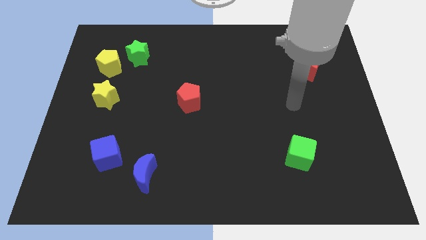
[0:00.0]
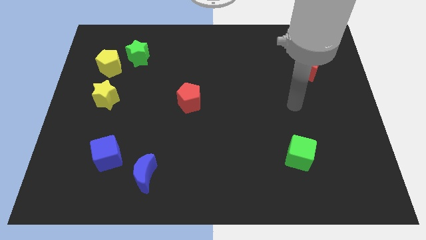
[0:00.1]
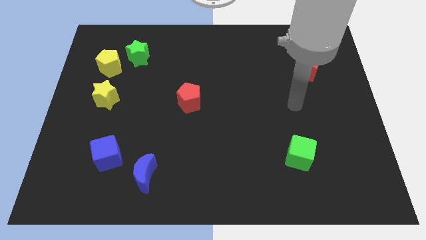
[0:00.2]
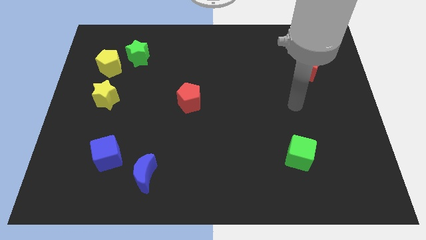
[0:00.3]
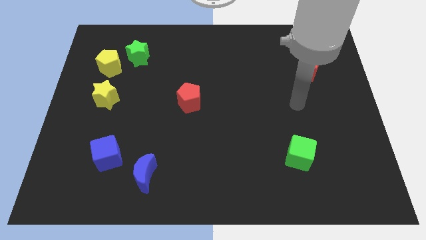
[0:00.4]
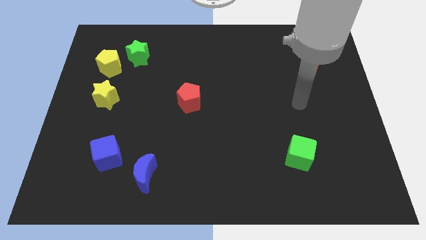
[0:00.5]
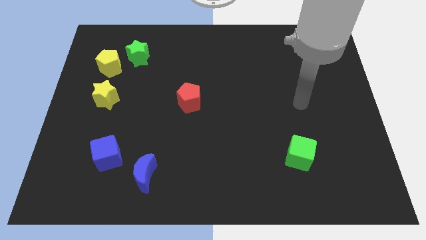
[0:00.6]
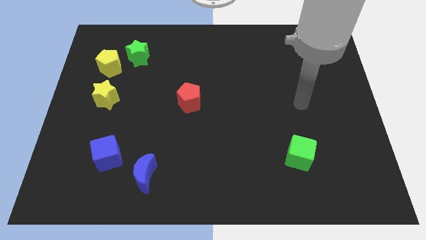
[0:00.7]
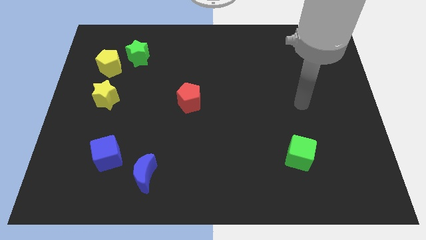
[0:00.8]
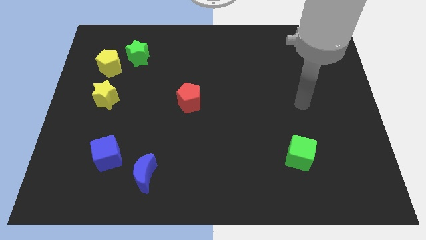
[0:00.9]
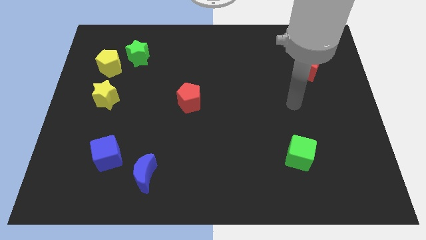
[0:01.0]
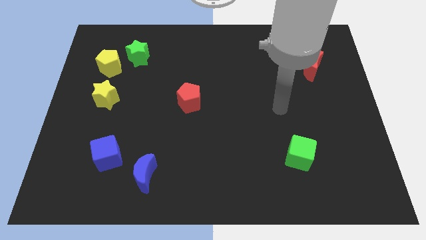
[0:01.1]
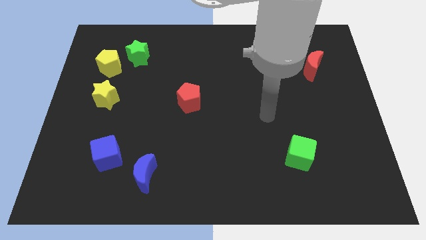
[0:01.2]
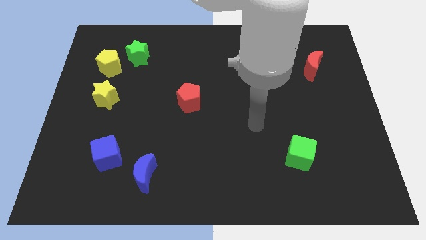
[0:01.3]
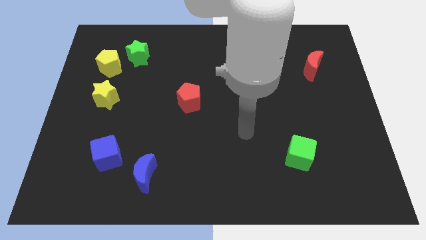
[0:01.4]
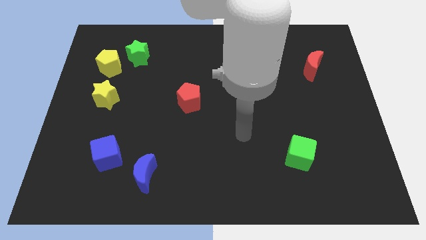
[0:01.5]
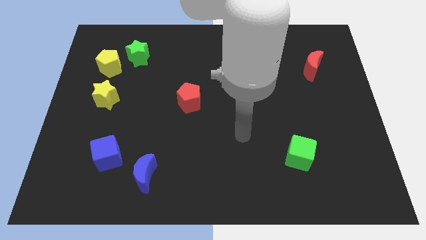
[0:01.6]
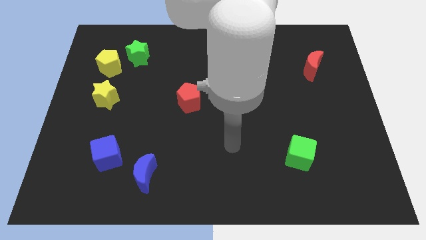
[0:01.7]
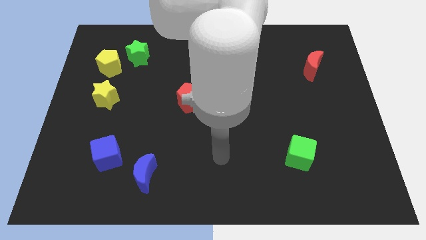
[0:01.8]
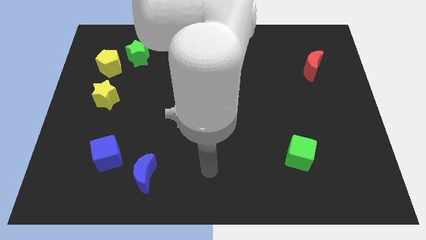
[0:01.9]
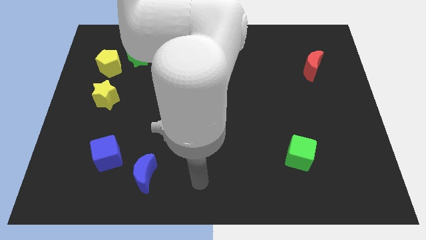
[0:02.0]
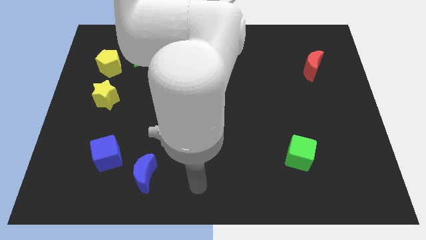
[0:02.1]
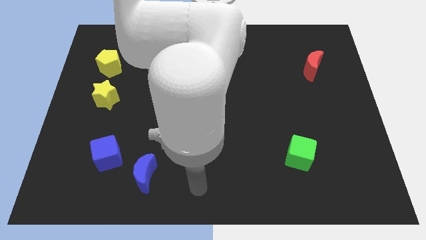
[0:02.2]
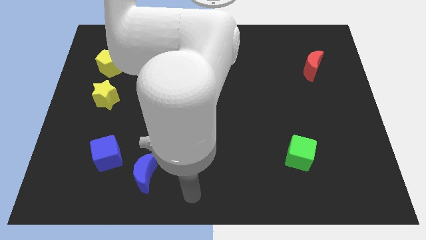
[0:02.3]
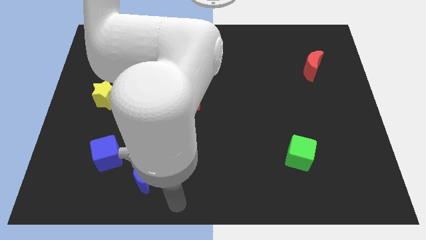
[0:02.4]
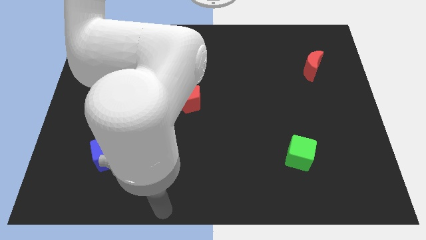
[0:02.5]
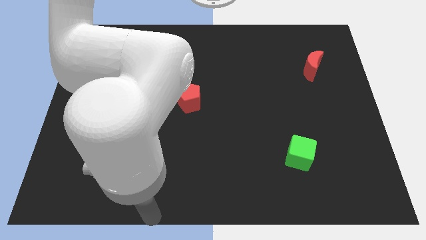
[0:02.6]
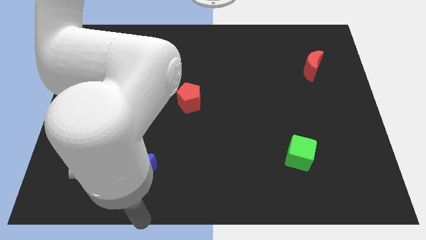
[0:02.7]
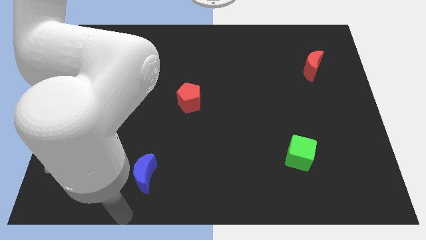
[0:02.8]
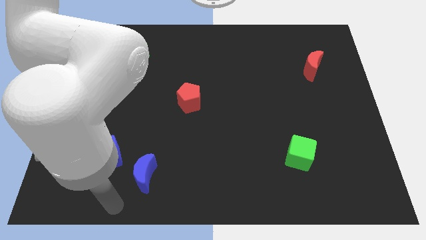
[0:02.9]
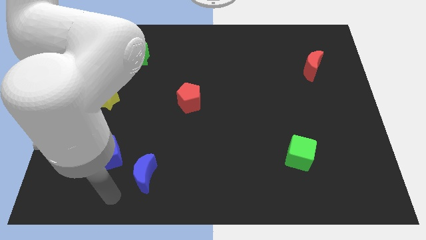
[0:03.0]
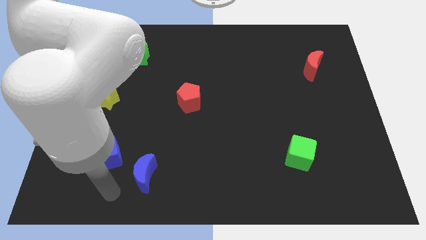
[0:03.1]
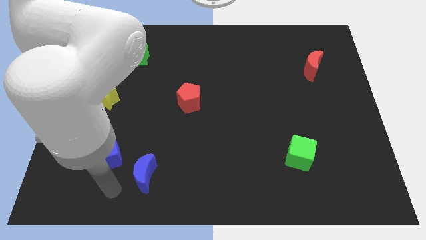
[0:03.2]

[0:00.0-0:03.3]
place your hand vertically below the blue cube

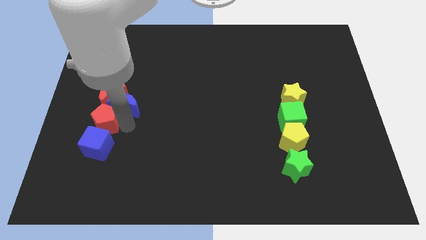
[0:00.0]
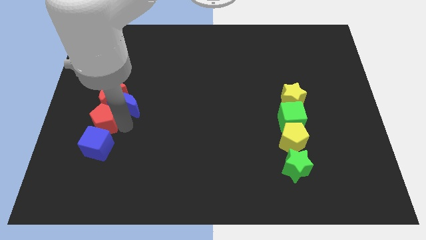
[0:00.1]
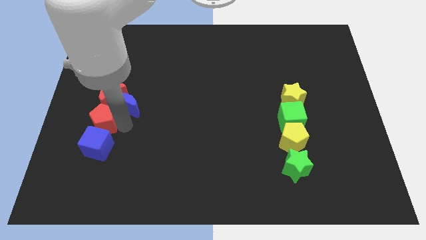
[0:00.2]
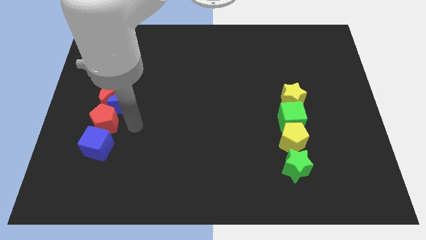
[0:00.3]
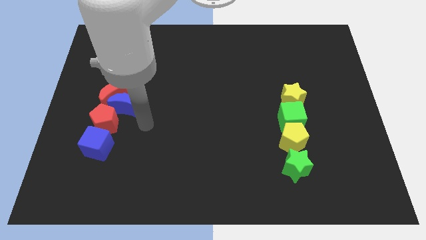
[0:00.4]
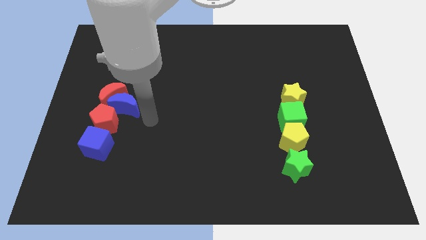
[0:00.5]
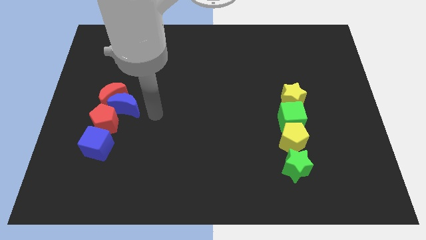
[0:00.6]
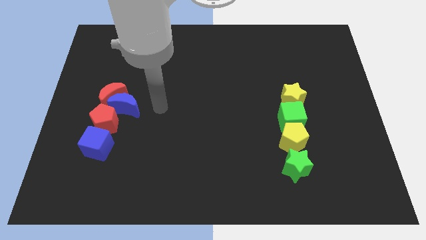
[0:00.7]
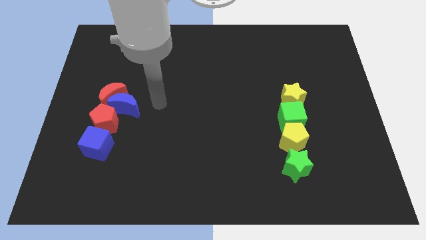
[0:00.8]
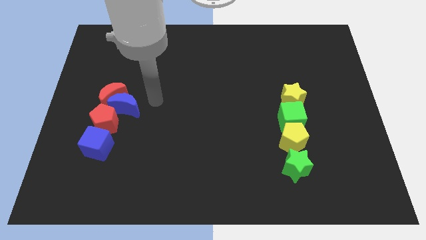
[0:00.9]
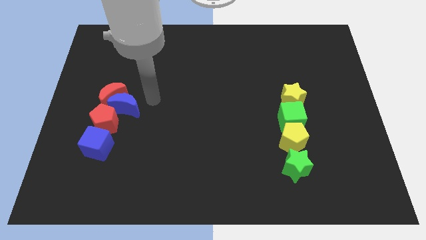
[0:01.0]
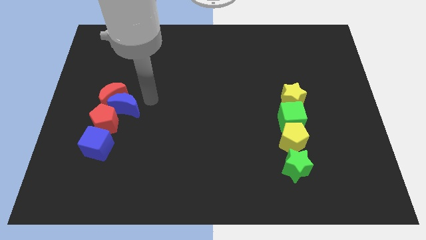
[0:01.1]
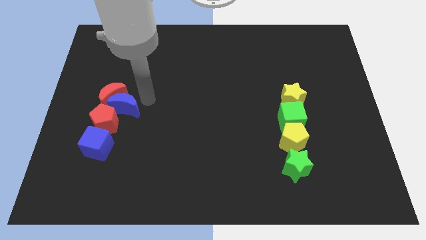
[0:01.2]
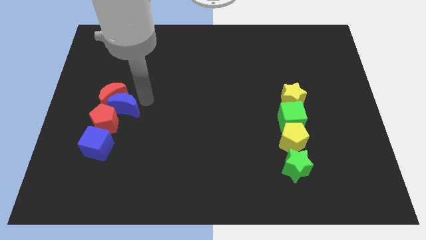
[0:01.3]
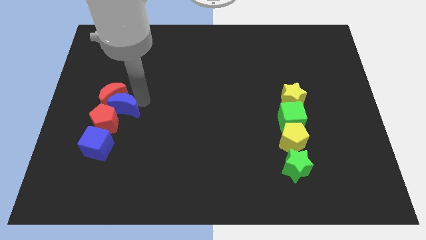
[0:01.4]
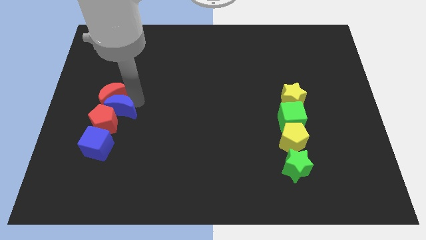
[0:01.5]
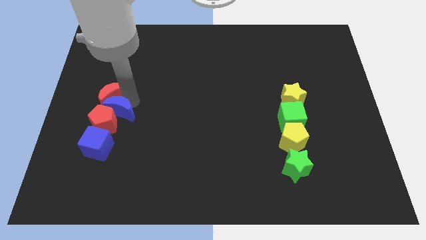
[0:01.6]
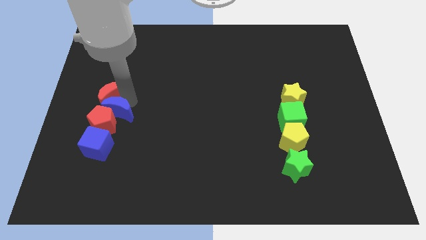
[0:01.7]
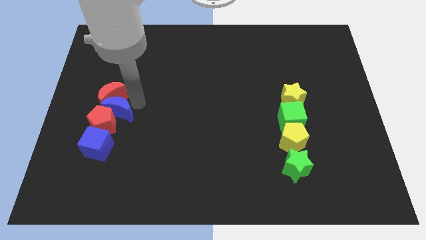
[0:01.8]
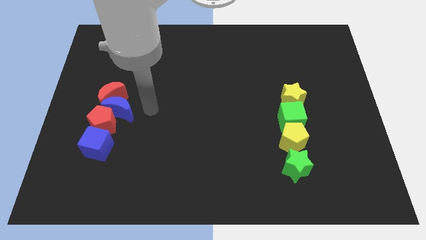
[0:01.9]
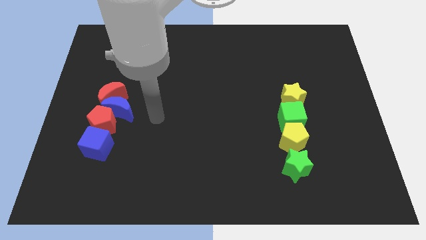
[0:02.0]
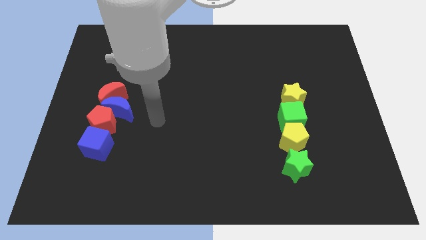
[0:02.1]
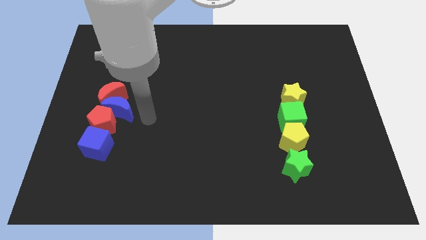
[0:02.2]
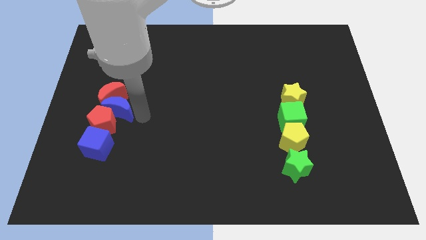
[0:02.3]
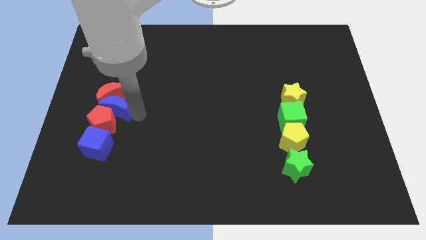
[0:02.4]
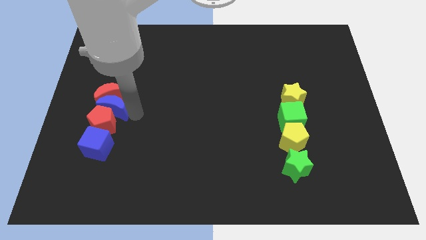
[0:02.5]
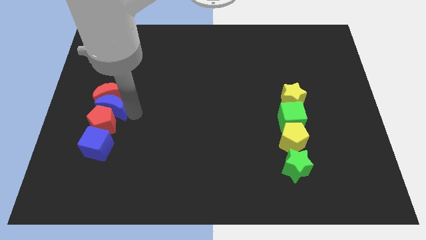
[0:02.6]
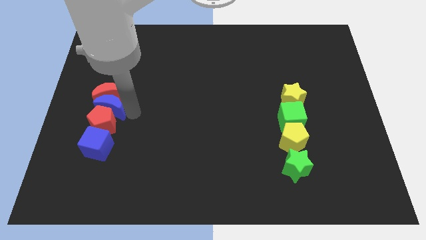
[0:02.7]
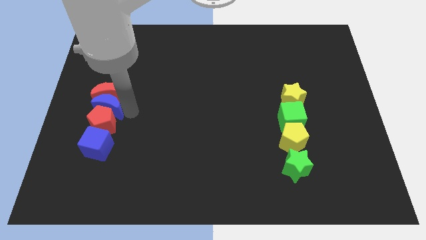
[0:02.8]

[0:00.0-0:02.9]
slightly push the blue crescent towards the red pentagon

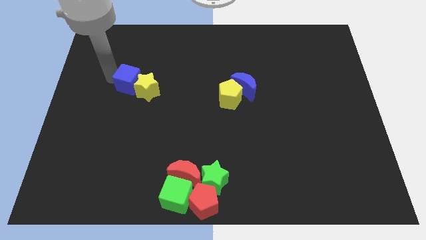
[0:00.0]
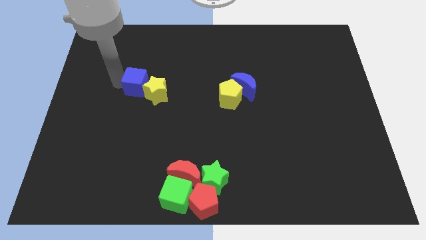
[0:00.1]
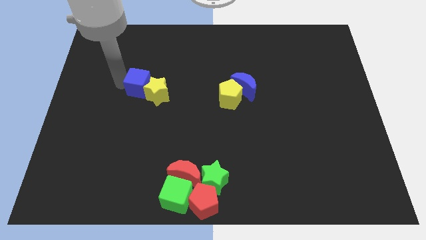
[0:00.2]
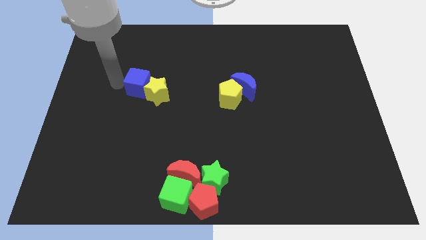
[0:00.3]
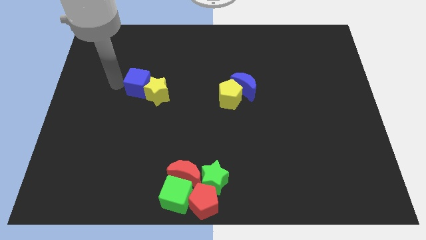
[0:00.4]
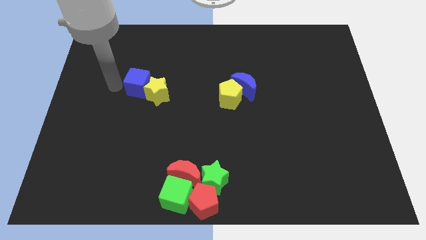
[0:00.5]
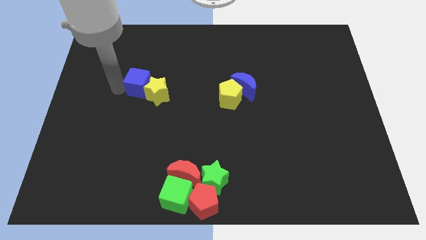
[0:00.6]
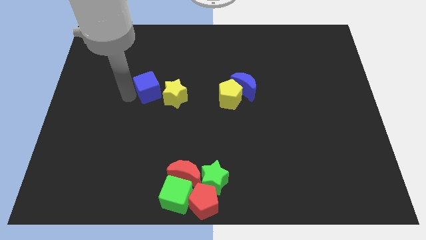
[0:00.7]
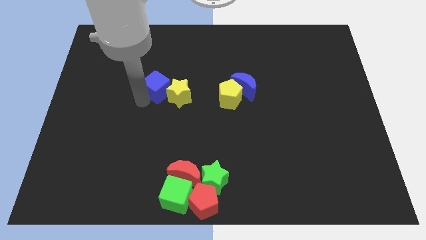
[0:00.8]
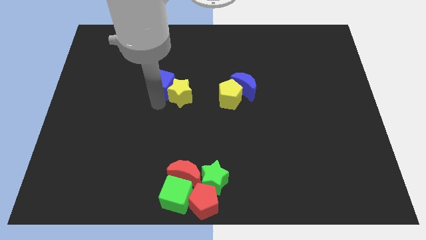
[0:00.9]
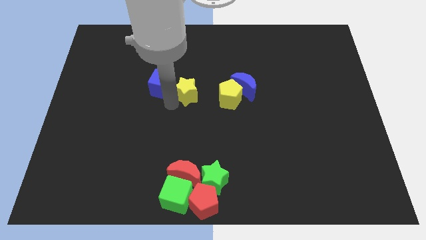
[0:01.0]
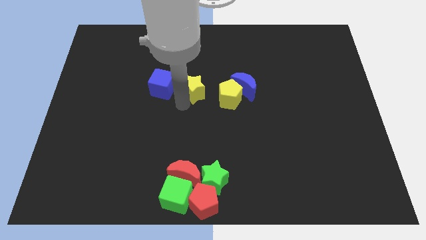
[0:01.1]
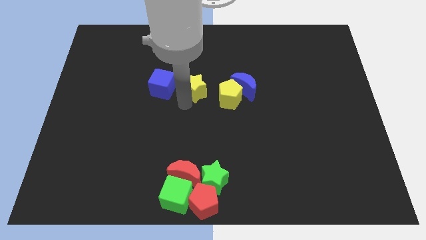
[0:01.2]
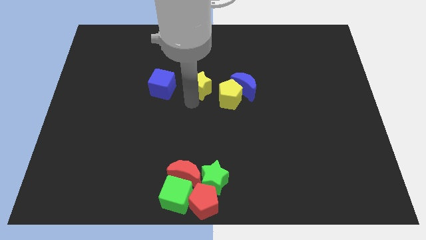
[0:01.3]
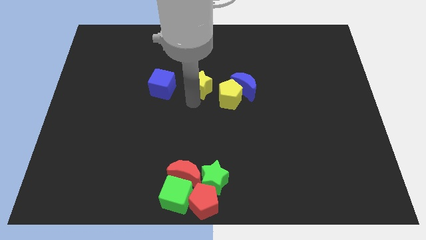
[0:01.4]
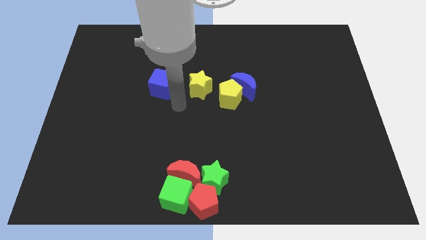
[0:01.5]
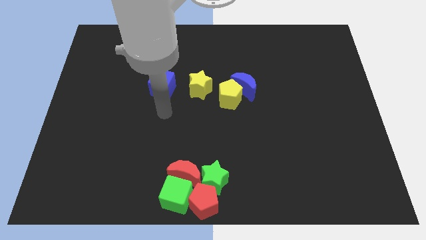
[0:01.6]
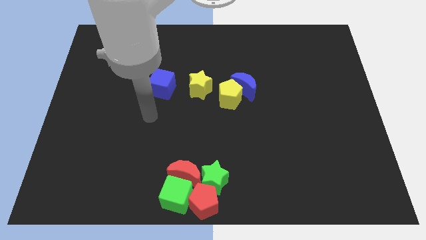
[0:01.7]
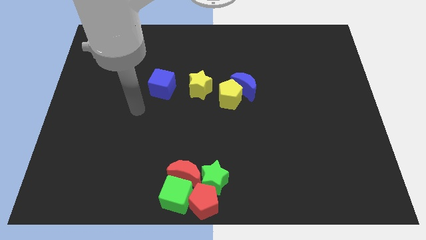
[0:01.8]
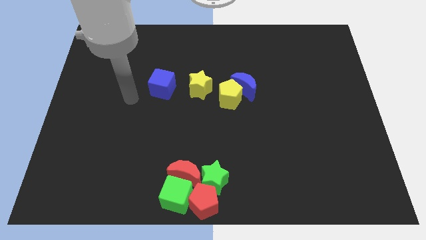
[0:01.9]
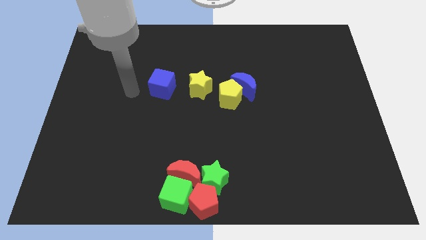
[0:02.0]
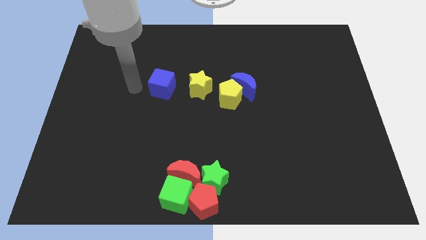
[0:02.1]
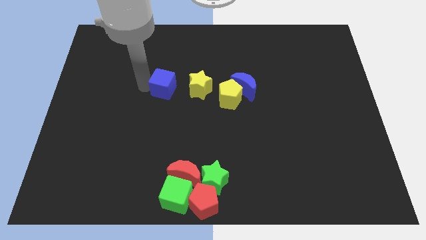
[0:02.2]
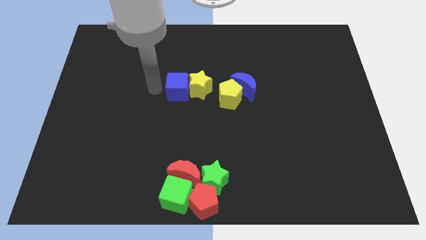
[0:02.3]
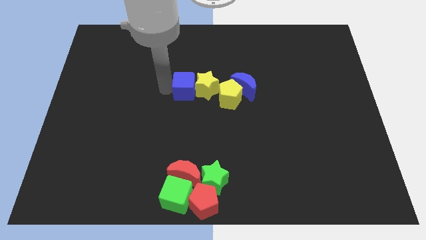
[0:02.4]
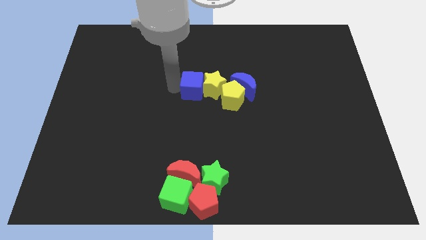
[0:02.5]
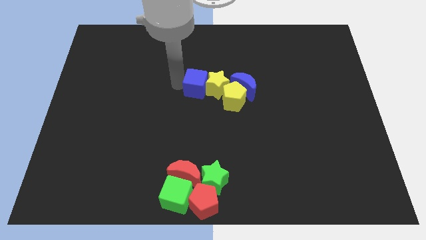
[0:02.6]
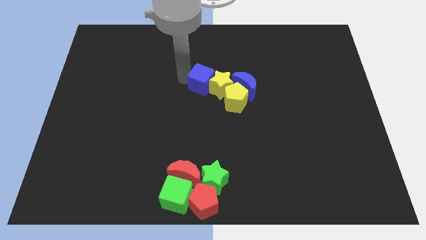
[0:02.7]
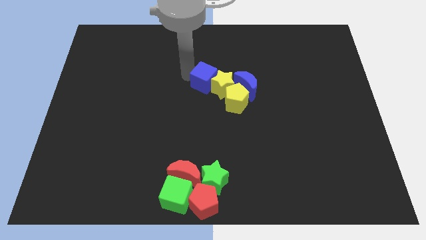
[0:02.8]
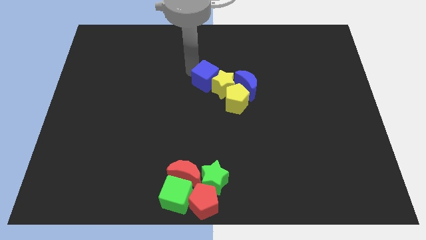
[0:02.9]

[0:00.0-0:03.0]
push the yellow star and blue cube into the yellow pentagon and blue moon
